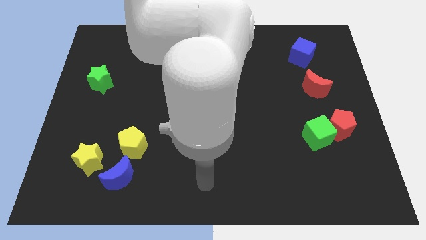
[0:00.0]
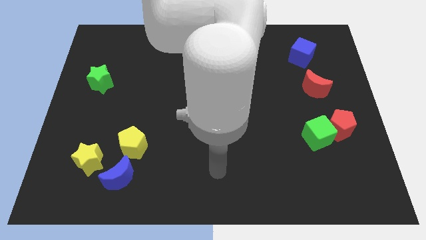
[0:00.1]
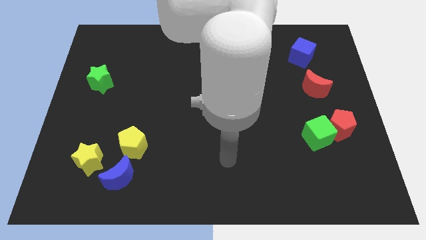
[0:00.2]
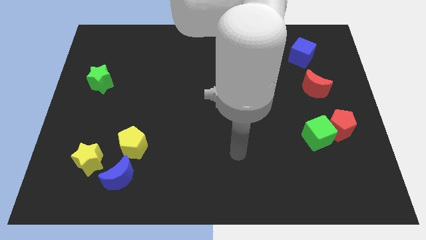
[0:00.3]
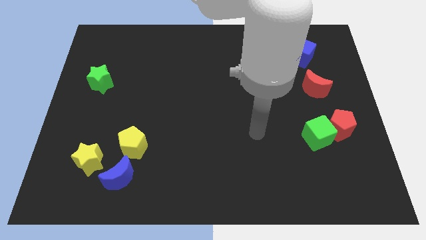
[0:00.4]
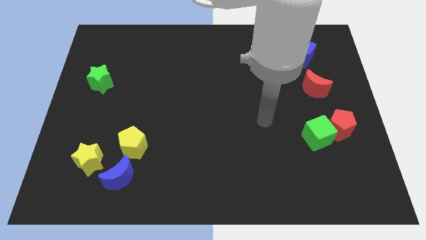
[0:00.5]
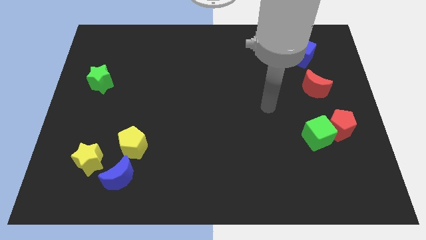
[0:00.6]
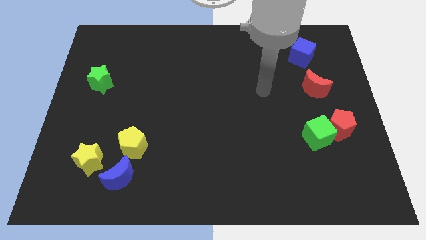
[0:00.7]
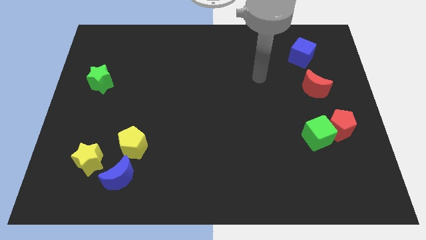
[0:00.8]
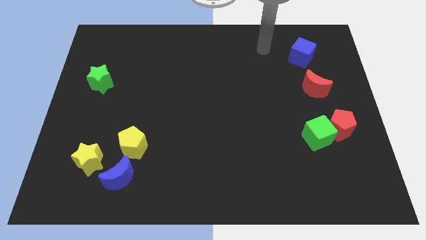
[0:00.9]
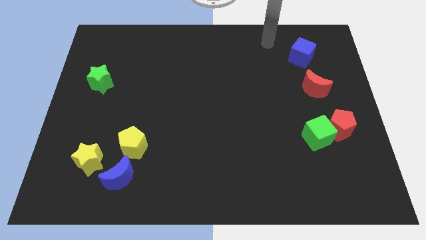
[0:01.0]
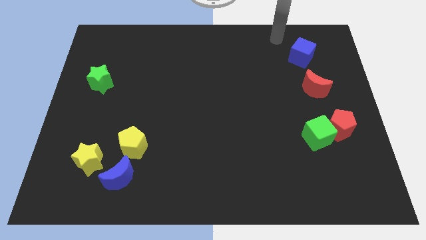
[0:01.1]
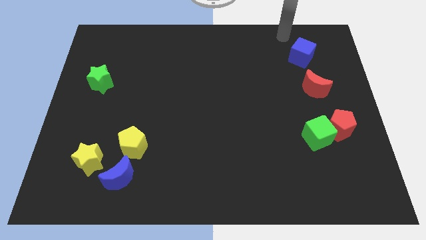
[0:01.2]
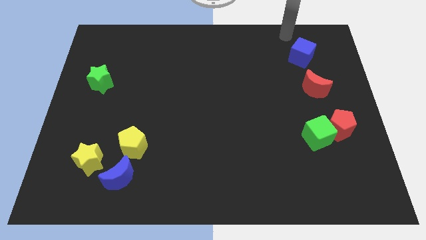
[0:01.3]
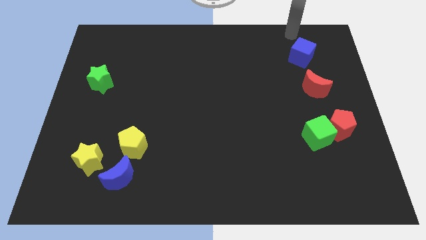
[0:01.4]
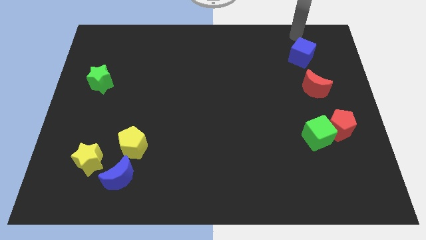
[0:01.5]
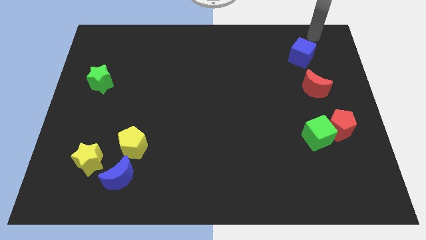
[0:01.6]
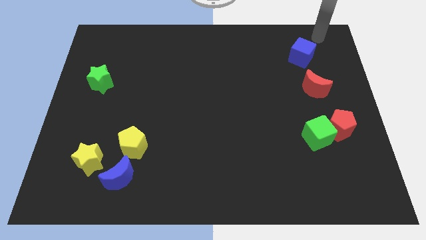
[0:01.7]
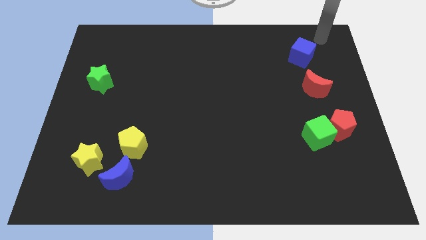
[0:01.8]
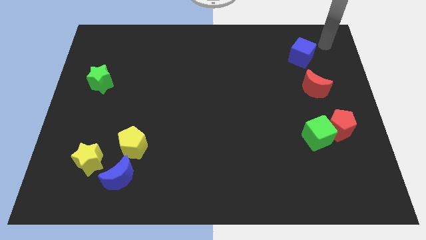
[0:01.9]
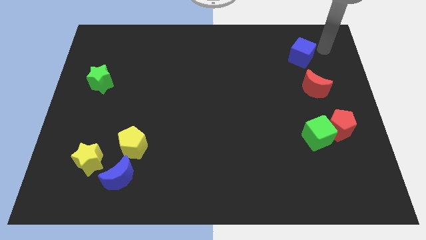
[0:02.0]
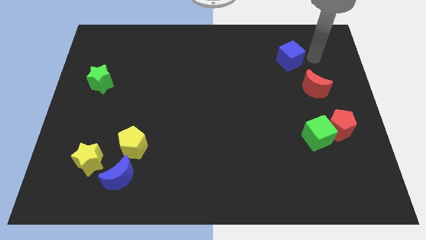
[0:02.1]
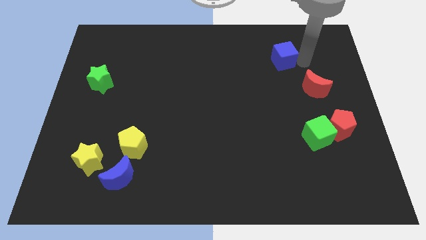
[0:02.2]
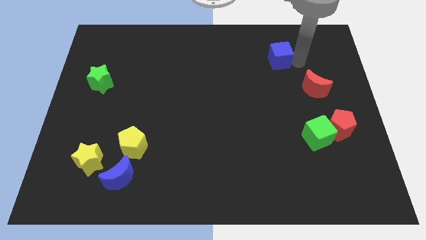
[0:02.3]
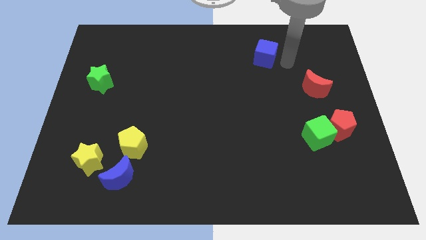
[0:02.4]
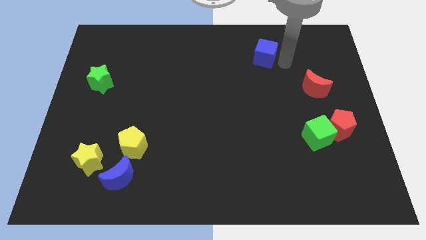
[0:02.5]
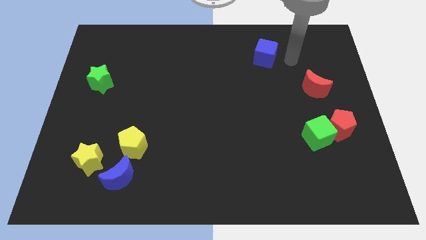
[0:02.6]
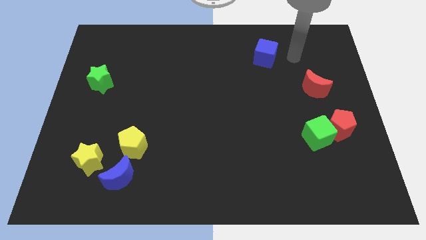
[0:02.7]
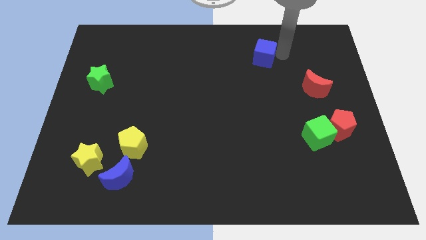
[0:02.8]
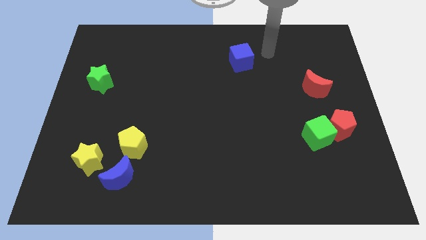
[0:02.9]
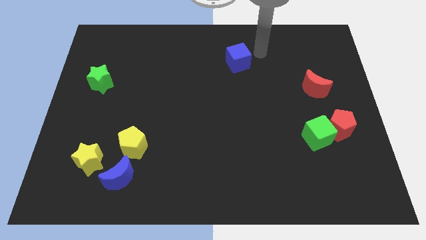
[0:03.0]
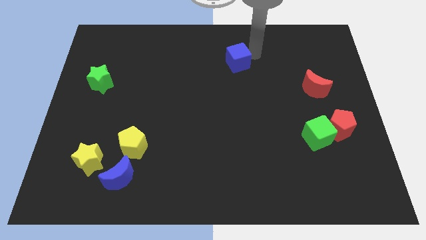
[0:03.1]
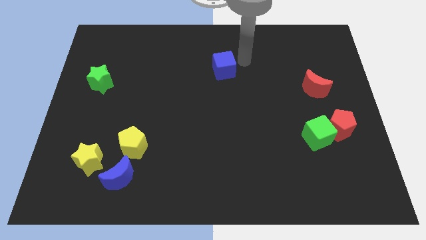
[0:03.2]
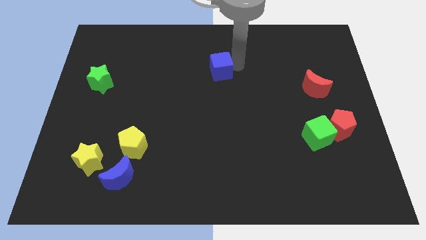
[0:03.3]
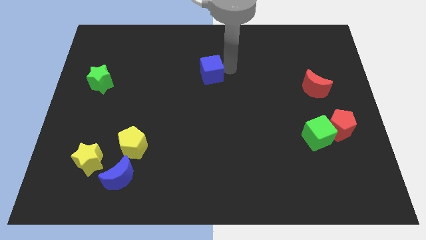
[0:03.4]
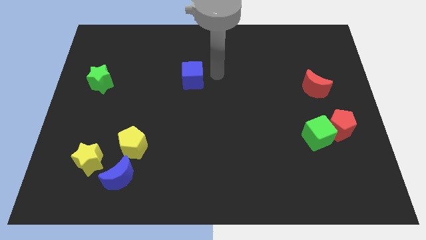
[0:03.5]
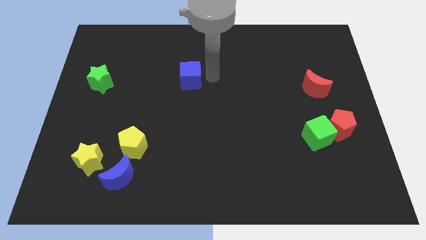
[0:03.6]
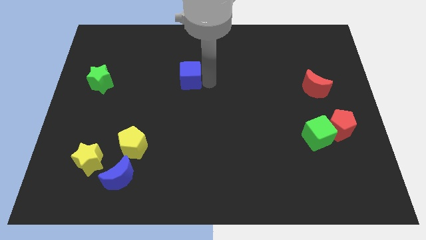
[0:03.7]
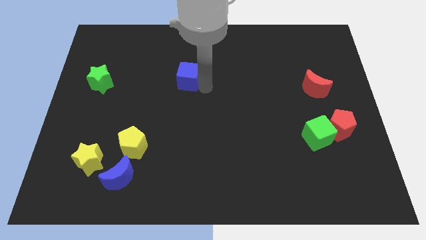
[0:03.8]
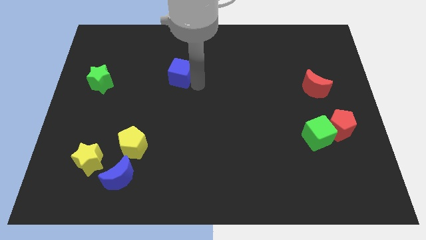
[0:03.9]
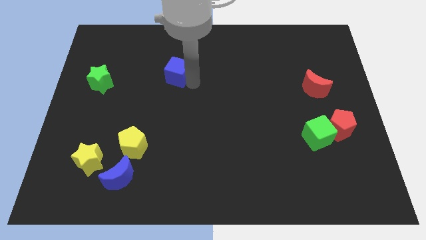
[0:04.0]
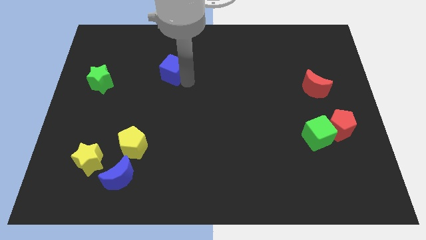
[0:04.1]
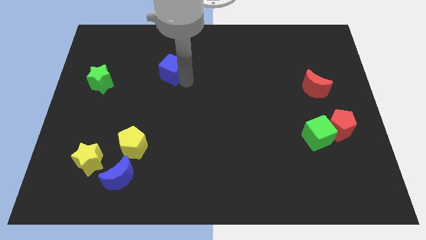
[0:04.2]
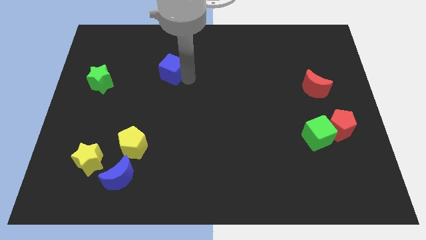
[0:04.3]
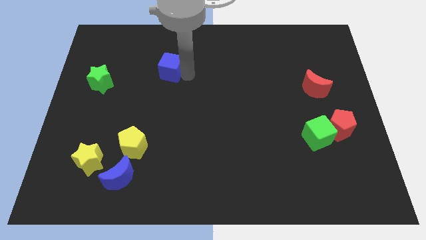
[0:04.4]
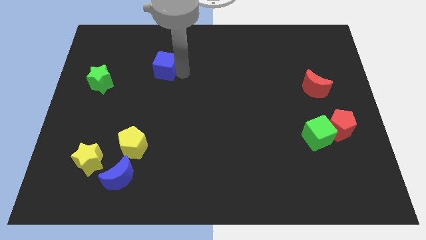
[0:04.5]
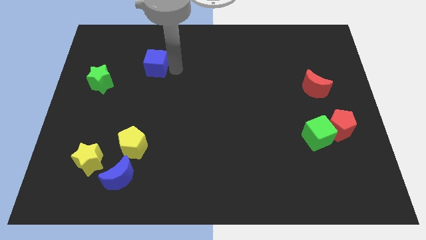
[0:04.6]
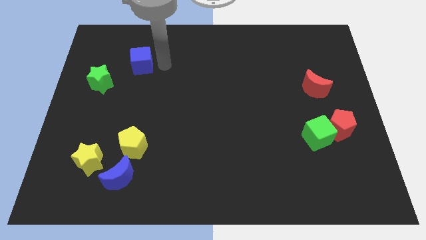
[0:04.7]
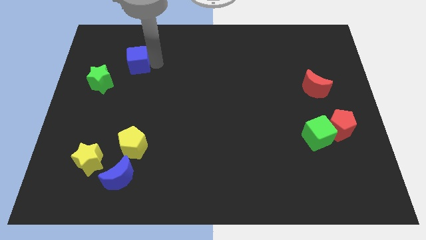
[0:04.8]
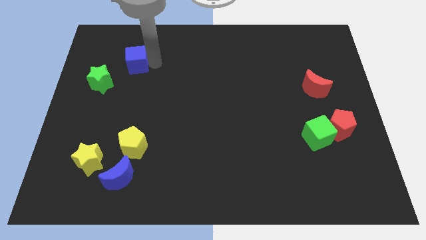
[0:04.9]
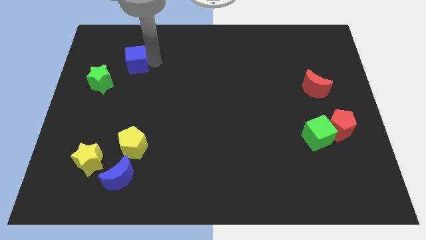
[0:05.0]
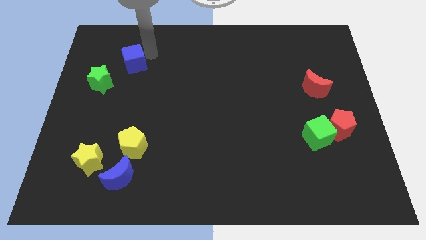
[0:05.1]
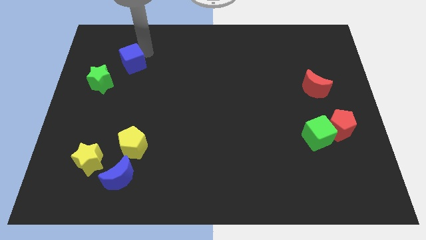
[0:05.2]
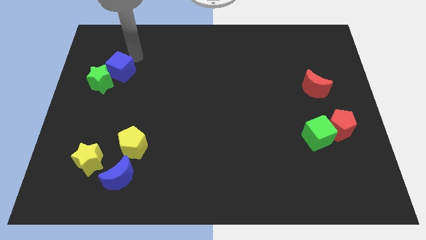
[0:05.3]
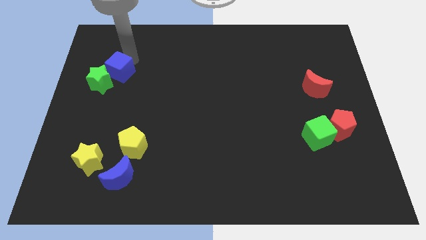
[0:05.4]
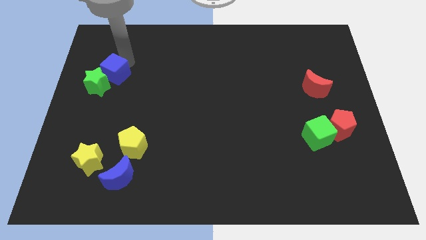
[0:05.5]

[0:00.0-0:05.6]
push the blue cube close to the green star

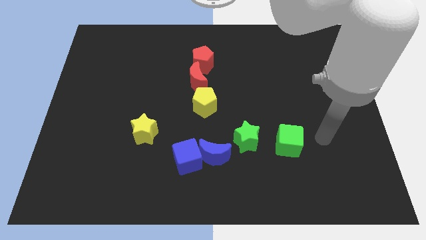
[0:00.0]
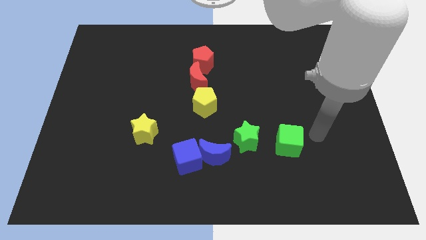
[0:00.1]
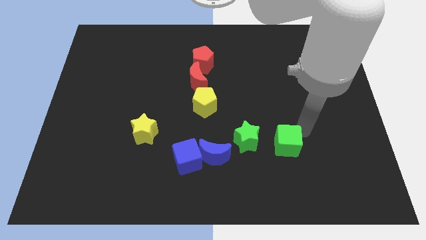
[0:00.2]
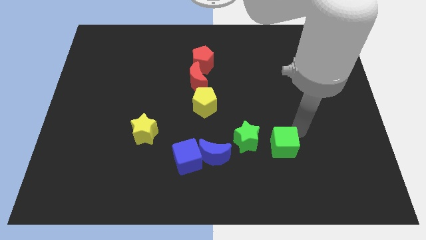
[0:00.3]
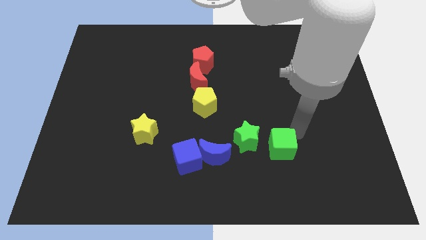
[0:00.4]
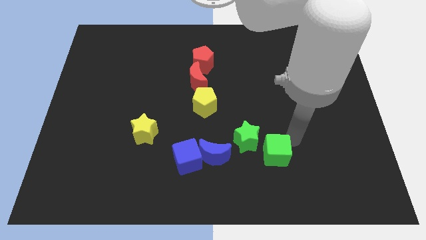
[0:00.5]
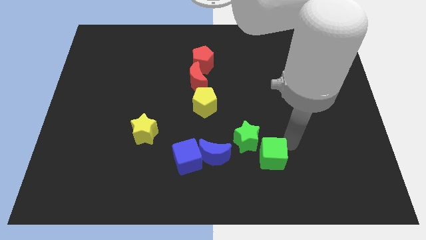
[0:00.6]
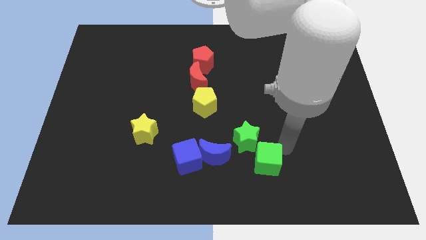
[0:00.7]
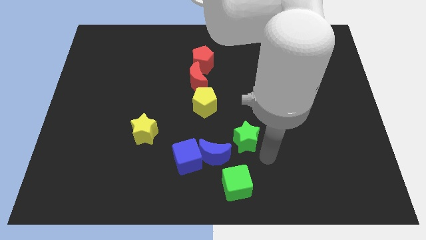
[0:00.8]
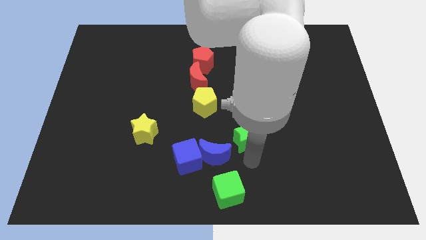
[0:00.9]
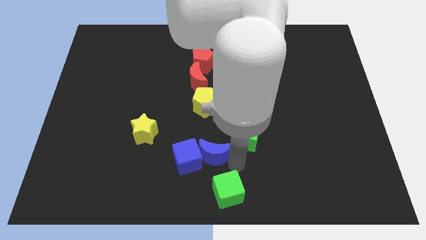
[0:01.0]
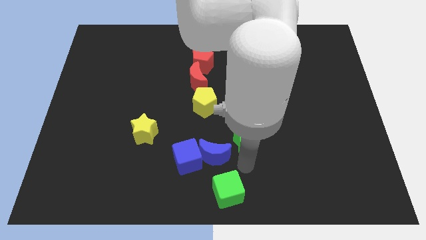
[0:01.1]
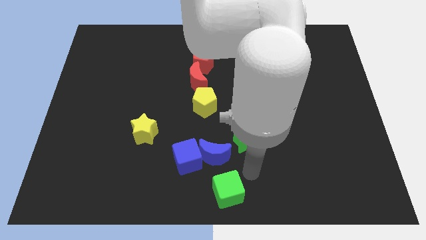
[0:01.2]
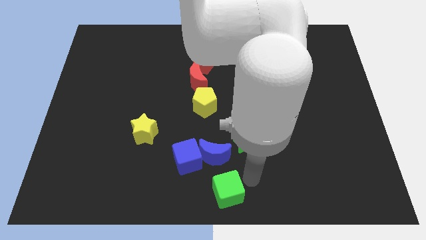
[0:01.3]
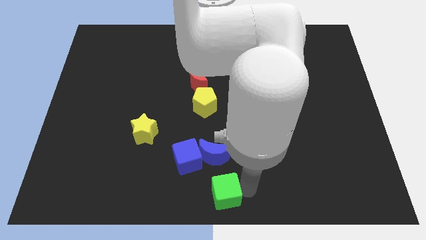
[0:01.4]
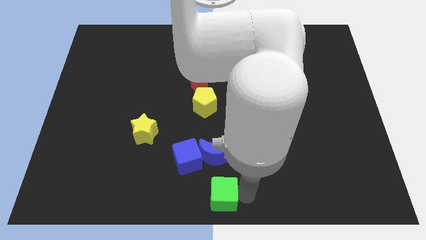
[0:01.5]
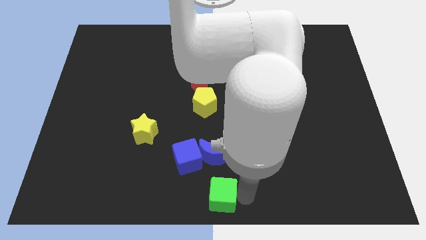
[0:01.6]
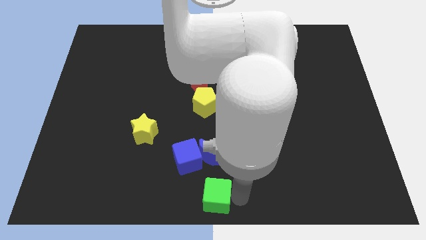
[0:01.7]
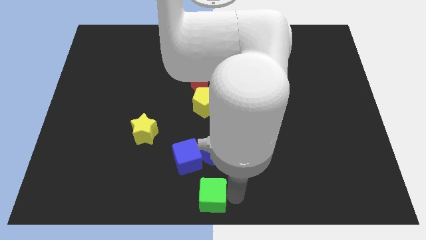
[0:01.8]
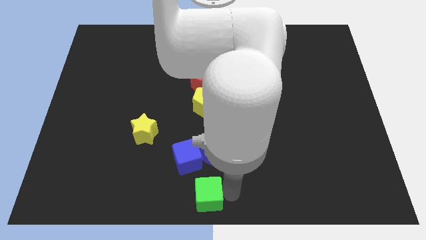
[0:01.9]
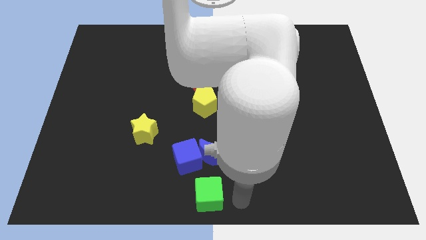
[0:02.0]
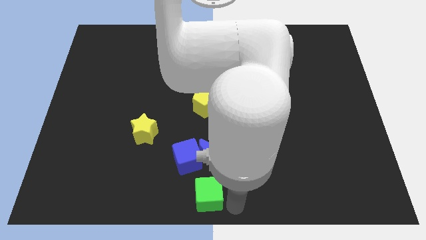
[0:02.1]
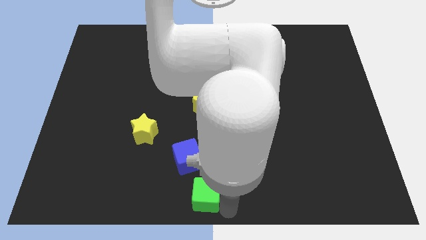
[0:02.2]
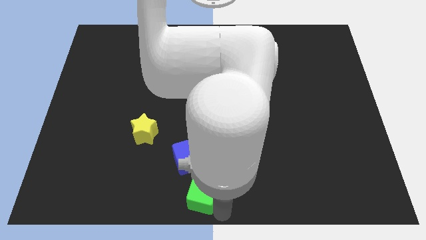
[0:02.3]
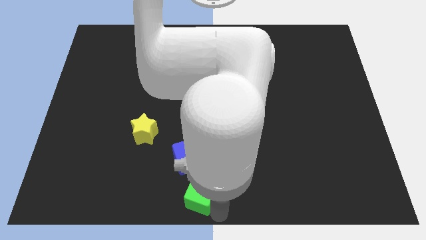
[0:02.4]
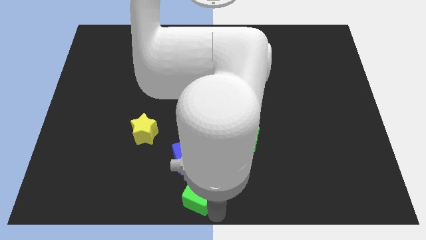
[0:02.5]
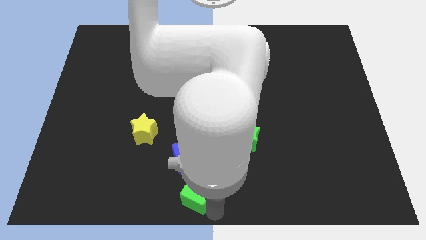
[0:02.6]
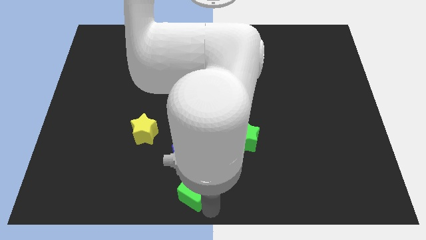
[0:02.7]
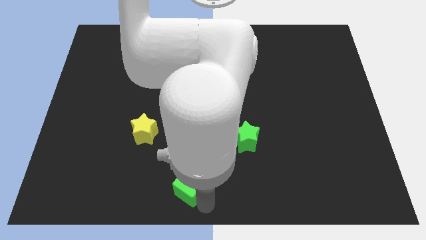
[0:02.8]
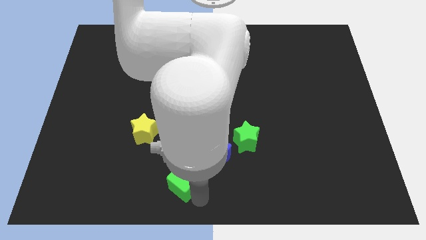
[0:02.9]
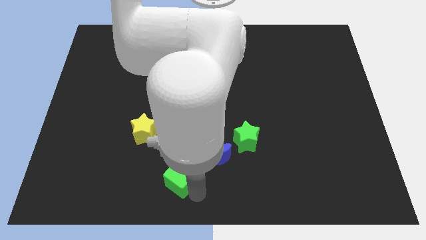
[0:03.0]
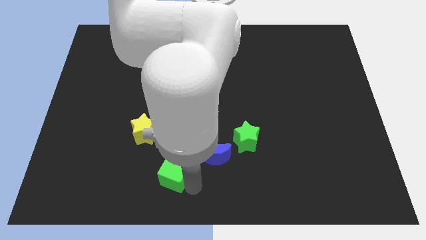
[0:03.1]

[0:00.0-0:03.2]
put the green cube next to the blue cube
